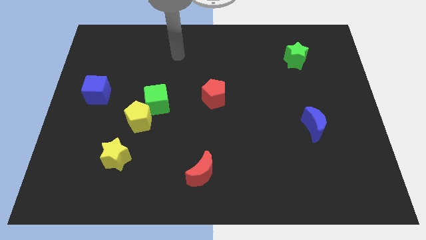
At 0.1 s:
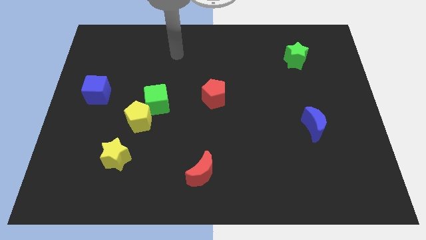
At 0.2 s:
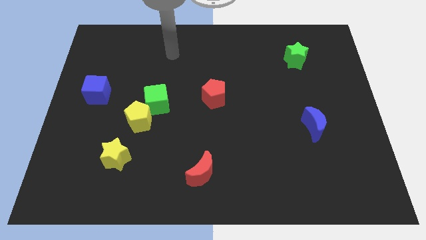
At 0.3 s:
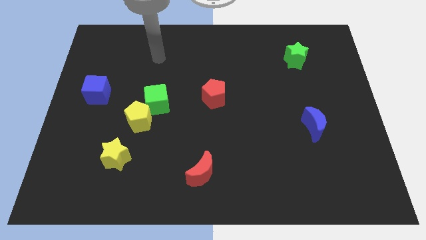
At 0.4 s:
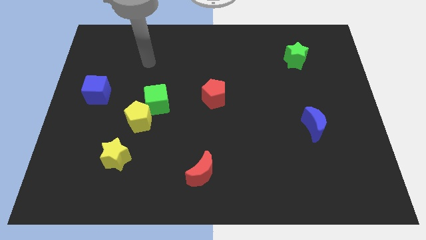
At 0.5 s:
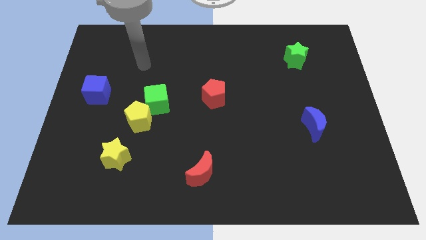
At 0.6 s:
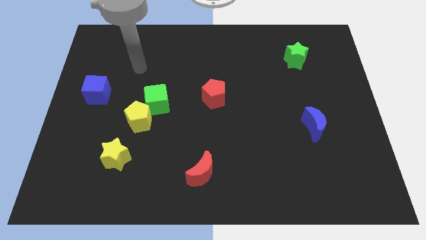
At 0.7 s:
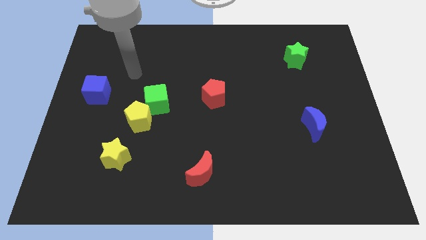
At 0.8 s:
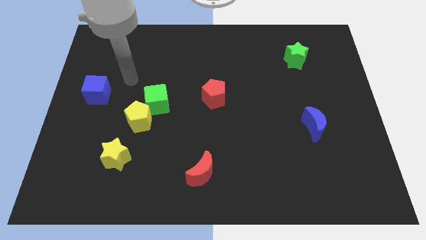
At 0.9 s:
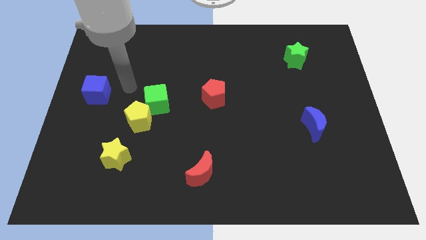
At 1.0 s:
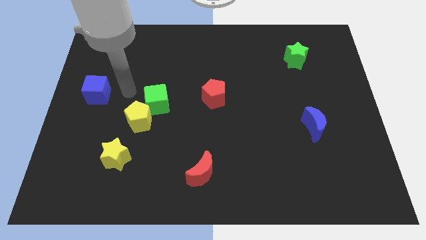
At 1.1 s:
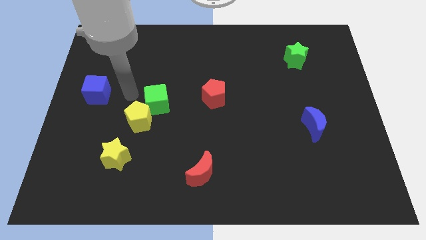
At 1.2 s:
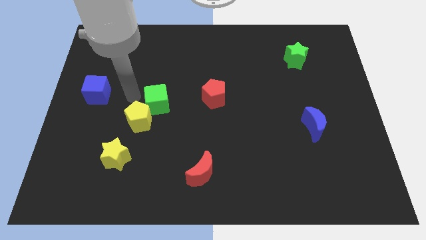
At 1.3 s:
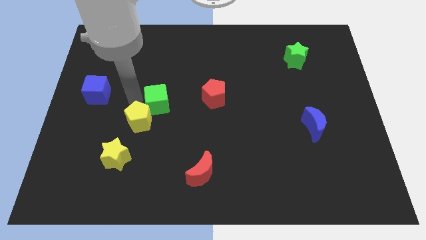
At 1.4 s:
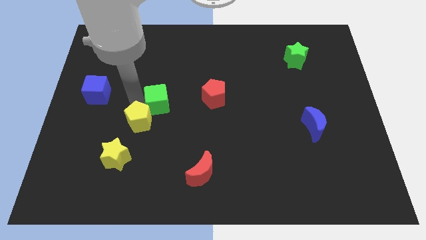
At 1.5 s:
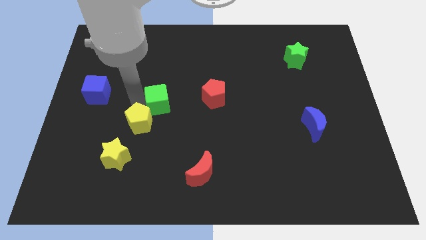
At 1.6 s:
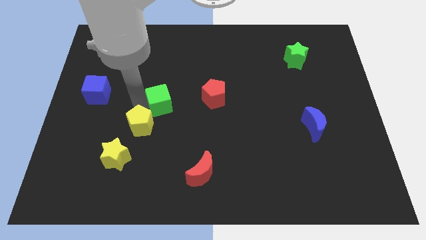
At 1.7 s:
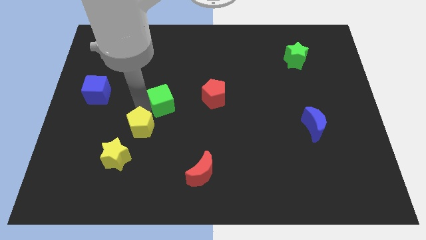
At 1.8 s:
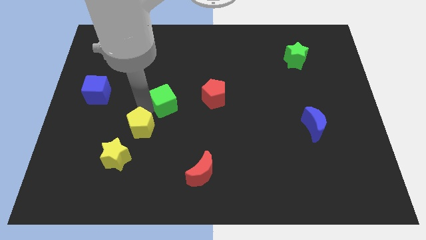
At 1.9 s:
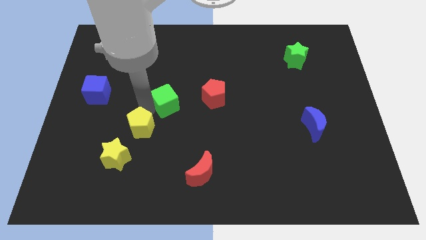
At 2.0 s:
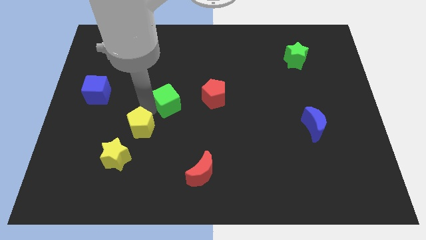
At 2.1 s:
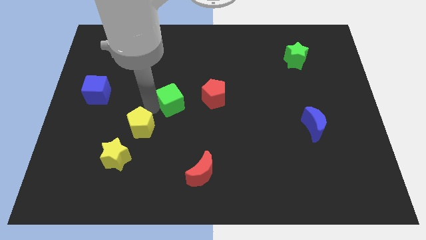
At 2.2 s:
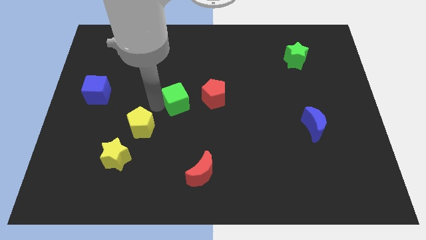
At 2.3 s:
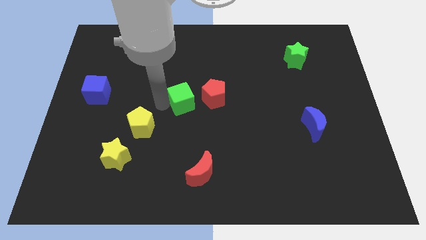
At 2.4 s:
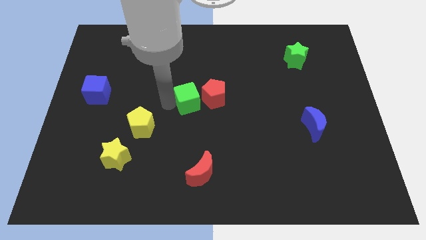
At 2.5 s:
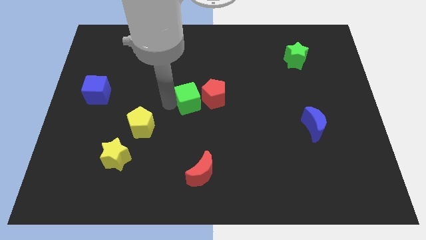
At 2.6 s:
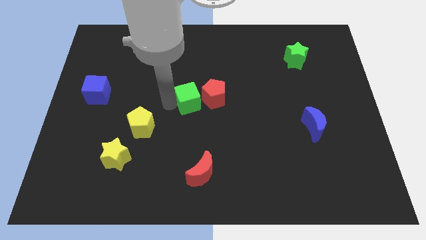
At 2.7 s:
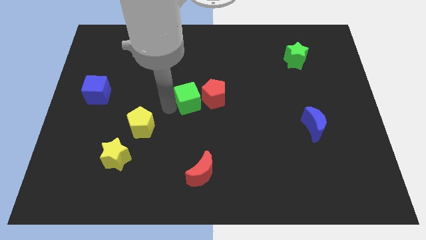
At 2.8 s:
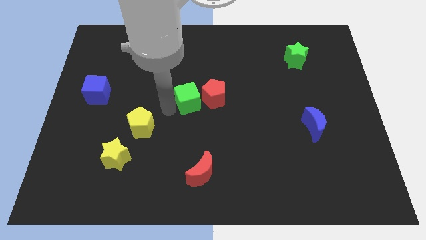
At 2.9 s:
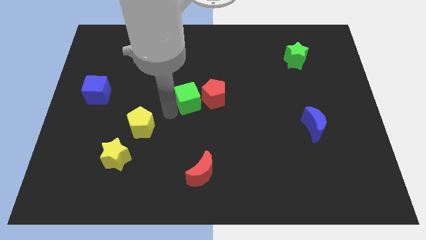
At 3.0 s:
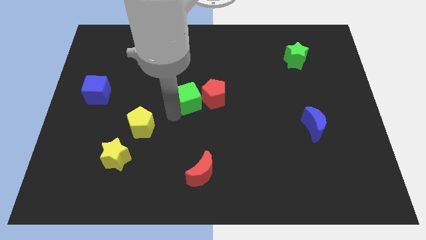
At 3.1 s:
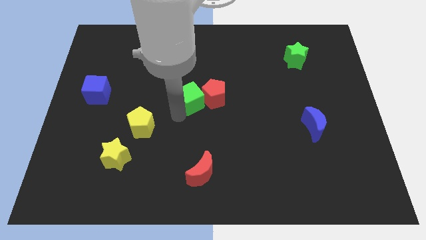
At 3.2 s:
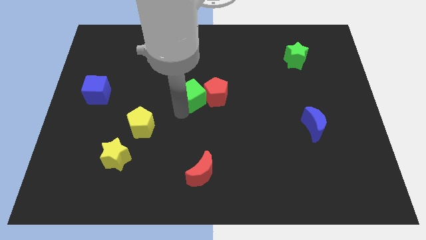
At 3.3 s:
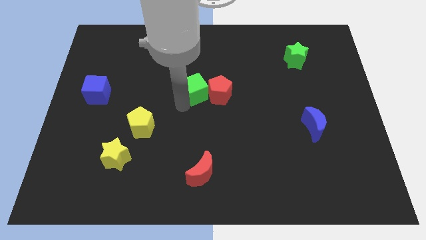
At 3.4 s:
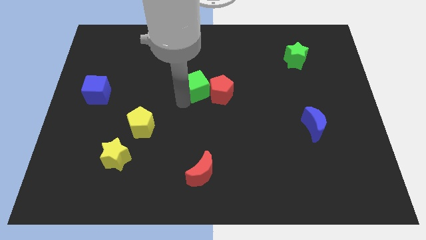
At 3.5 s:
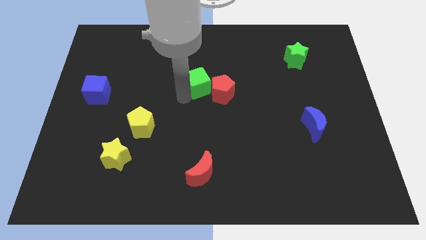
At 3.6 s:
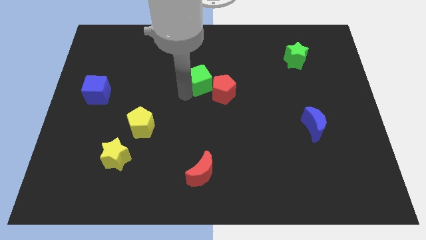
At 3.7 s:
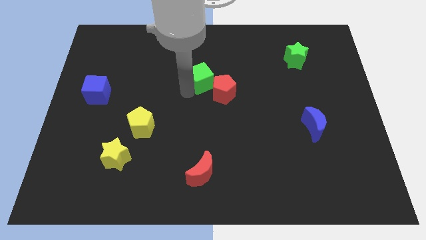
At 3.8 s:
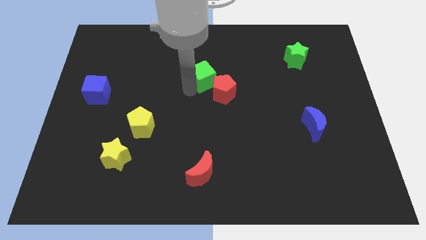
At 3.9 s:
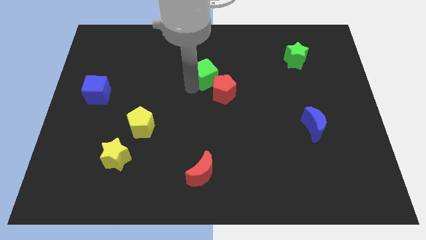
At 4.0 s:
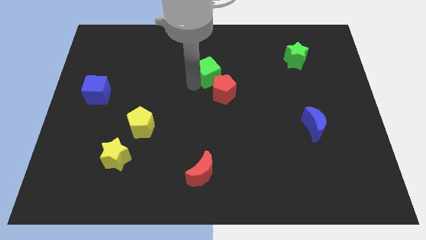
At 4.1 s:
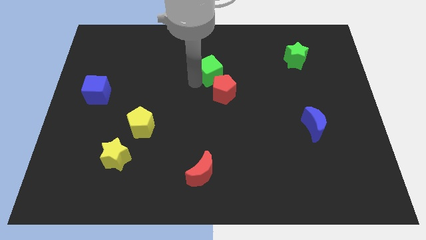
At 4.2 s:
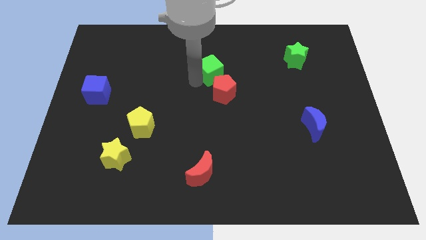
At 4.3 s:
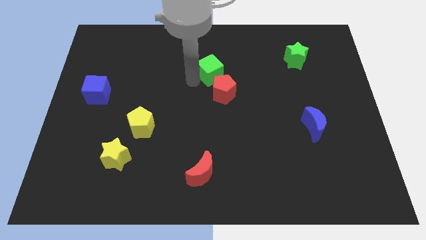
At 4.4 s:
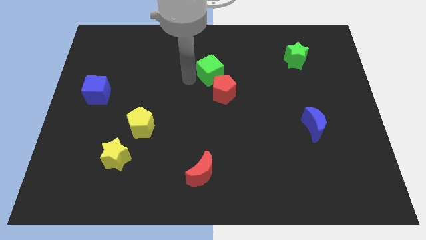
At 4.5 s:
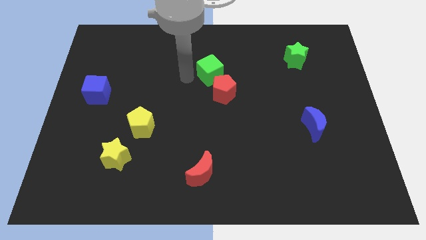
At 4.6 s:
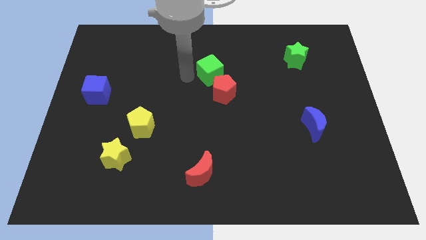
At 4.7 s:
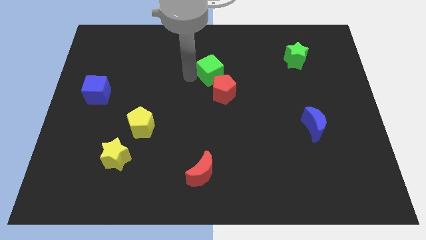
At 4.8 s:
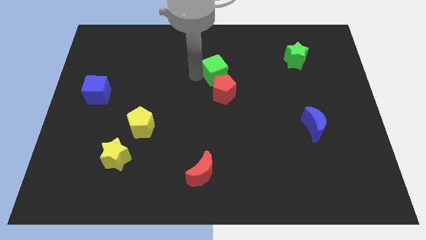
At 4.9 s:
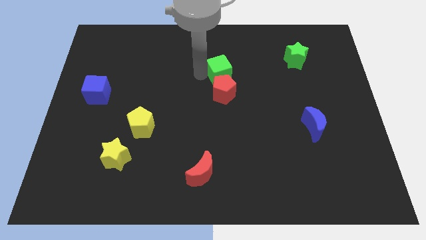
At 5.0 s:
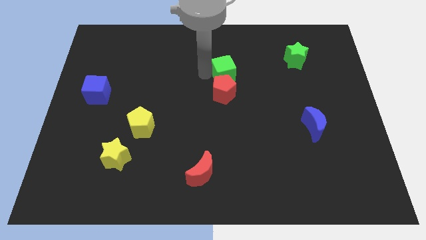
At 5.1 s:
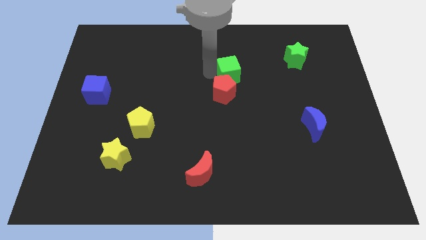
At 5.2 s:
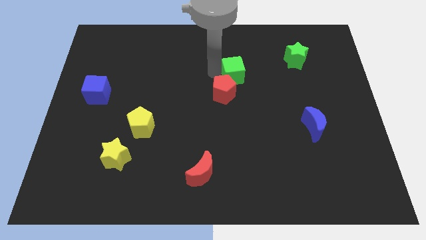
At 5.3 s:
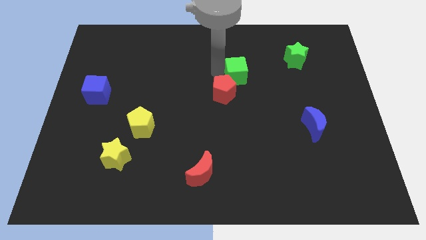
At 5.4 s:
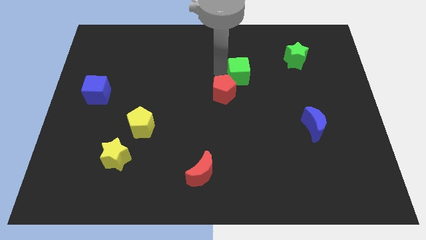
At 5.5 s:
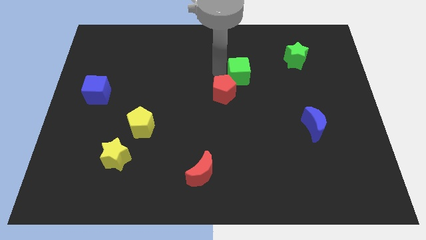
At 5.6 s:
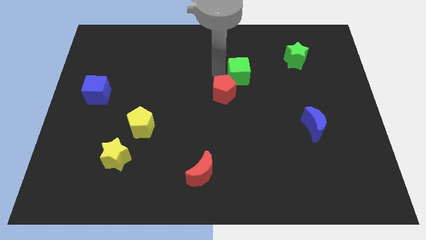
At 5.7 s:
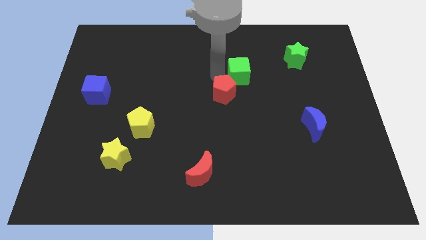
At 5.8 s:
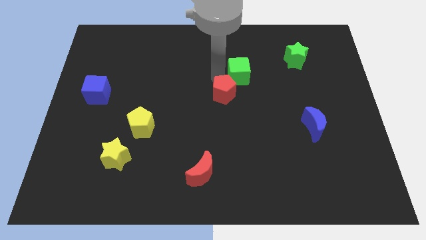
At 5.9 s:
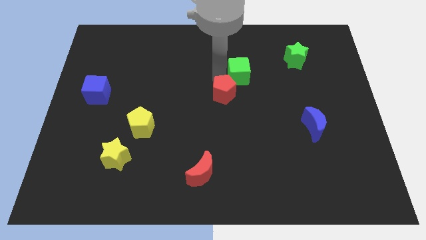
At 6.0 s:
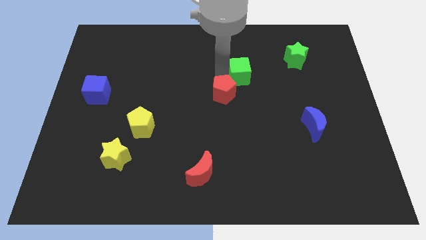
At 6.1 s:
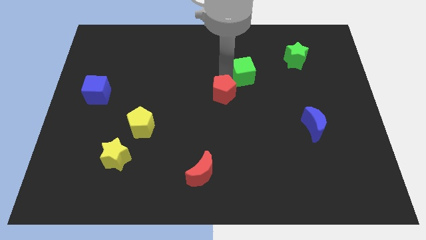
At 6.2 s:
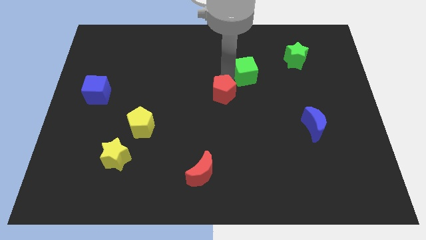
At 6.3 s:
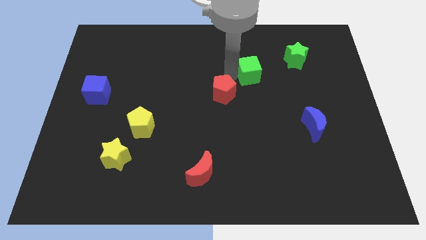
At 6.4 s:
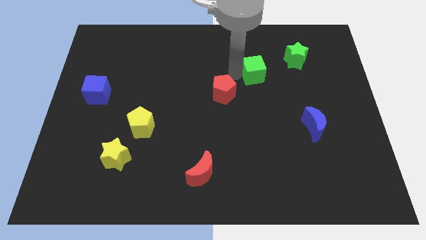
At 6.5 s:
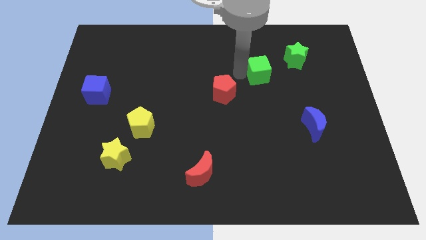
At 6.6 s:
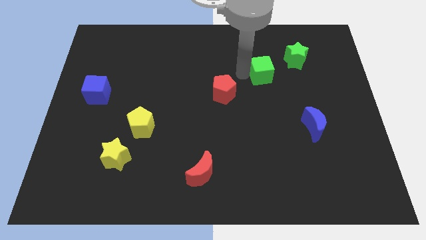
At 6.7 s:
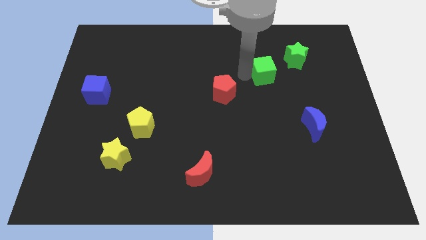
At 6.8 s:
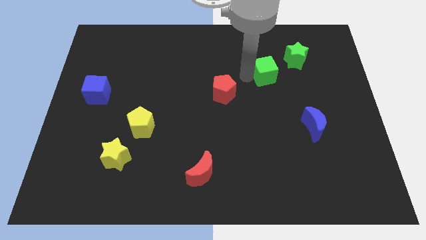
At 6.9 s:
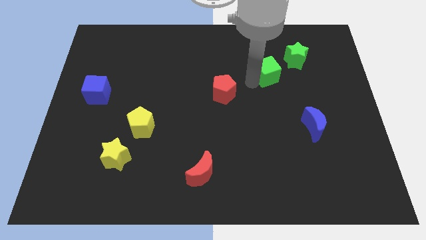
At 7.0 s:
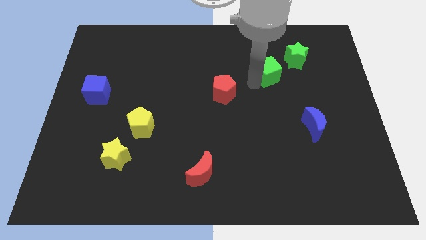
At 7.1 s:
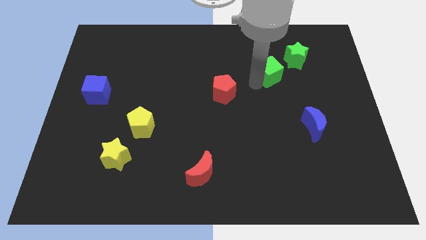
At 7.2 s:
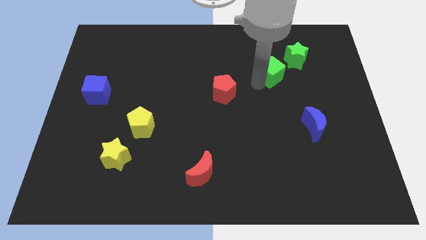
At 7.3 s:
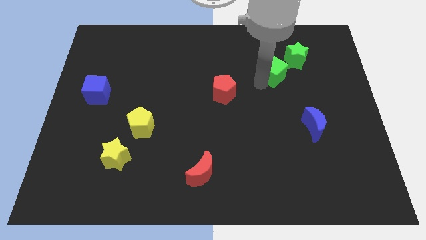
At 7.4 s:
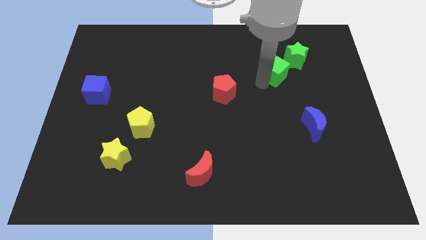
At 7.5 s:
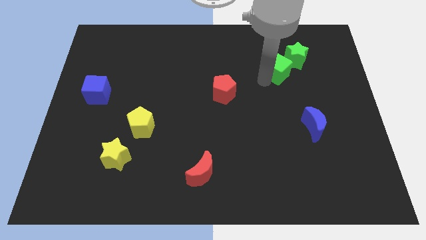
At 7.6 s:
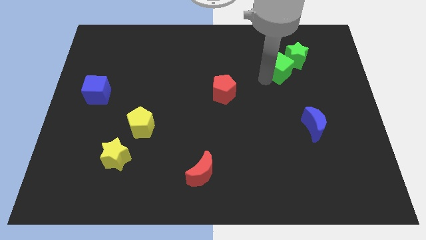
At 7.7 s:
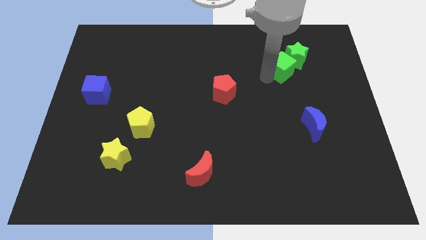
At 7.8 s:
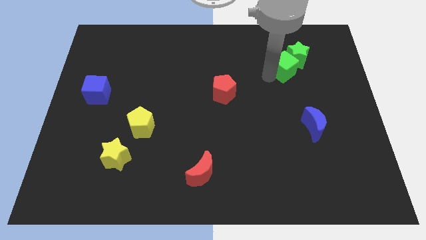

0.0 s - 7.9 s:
put the green cube next to the green star
